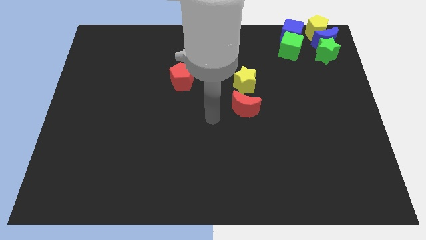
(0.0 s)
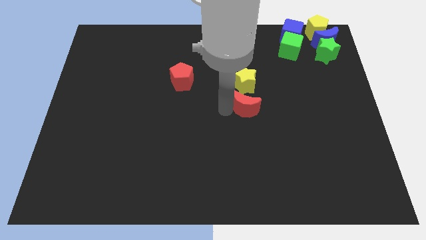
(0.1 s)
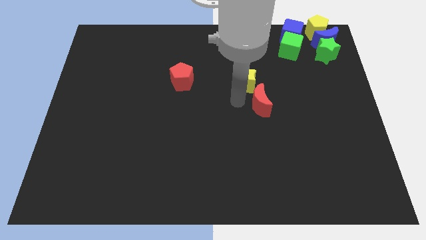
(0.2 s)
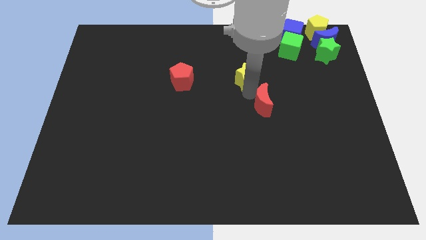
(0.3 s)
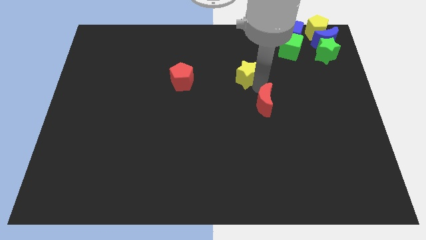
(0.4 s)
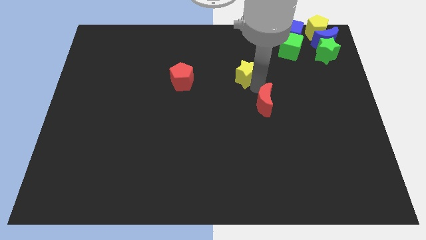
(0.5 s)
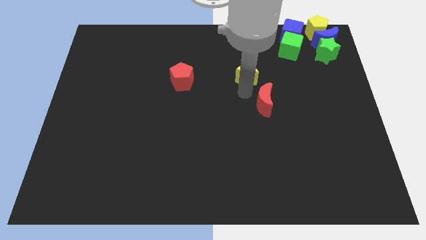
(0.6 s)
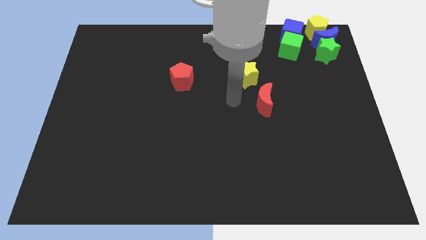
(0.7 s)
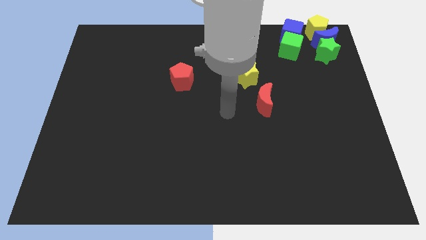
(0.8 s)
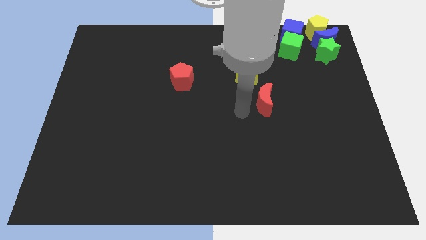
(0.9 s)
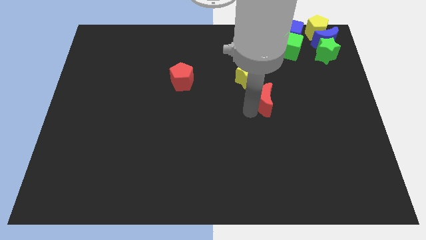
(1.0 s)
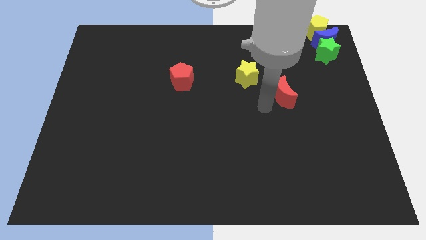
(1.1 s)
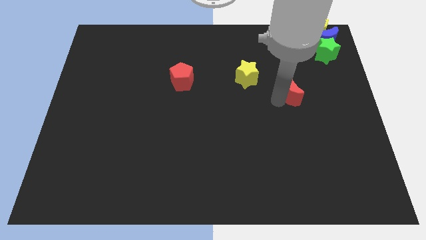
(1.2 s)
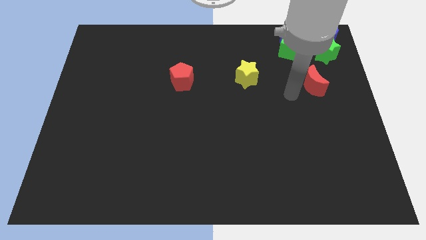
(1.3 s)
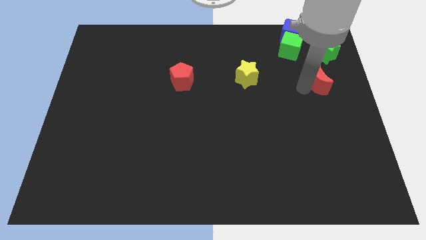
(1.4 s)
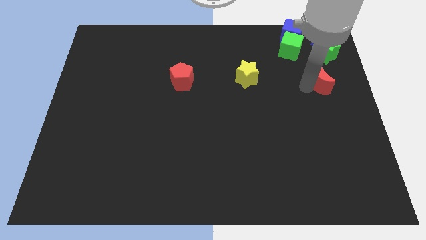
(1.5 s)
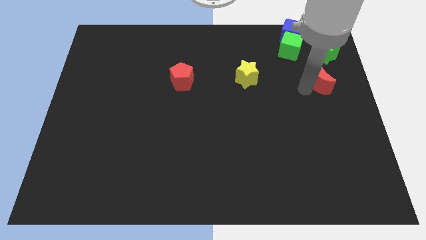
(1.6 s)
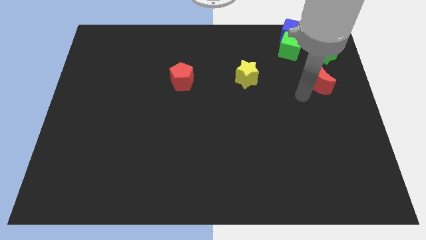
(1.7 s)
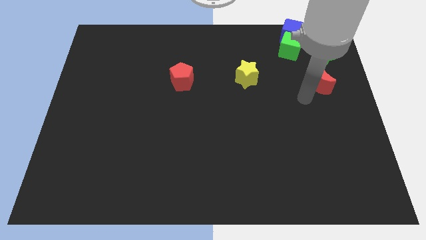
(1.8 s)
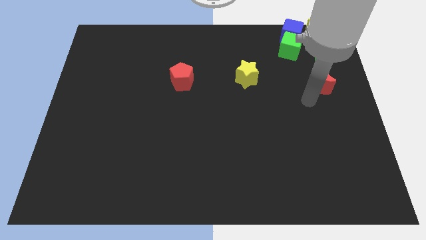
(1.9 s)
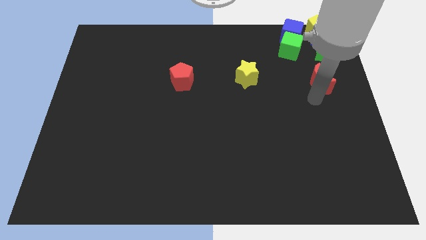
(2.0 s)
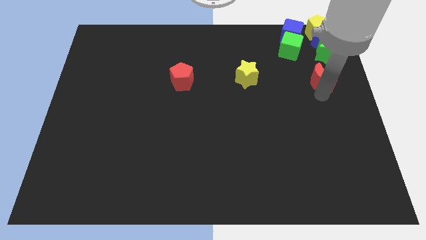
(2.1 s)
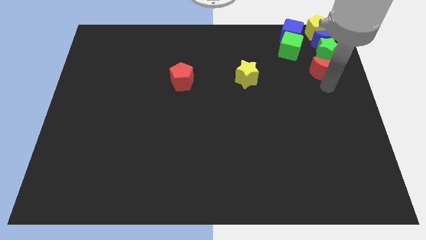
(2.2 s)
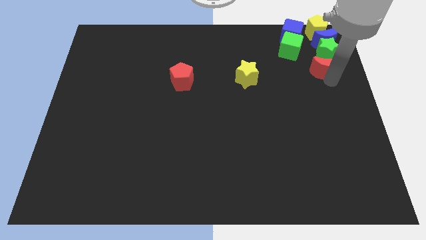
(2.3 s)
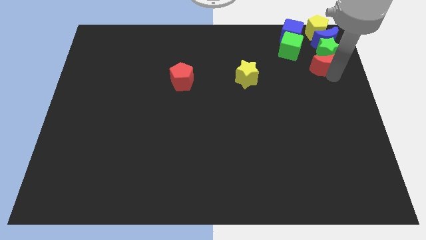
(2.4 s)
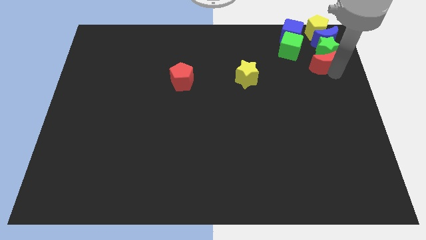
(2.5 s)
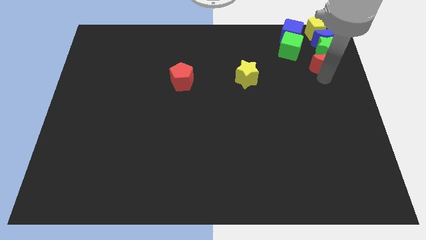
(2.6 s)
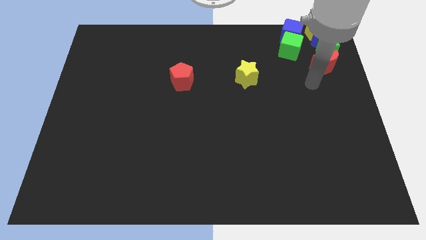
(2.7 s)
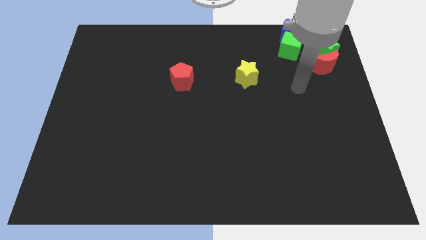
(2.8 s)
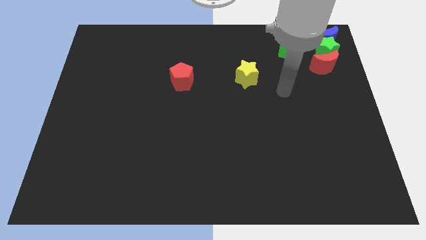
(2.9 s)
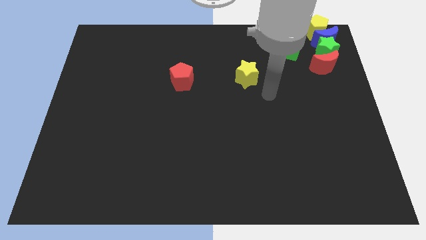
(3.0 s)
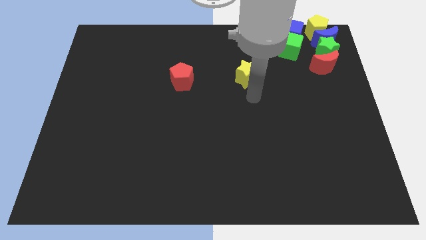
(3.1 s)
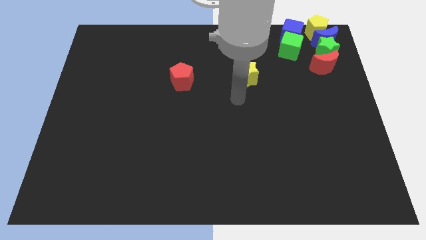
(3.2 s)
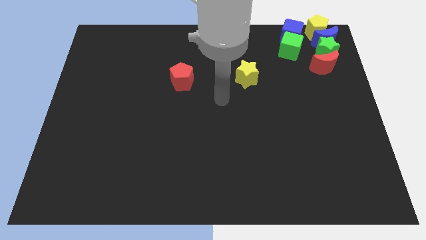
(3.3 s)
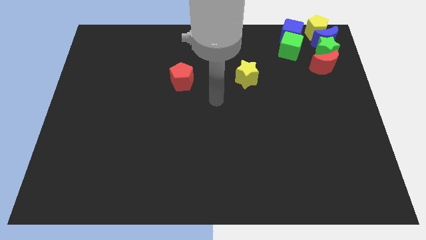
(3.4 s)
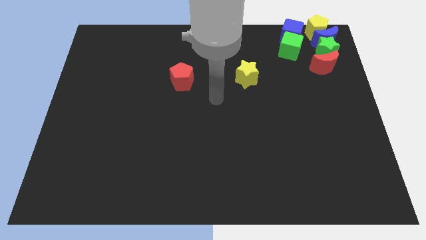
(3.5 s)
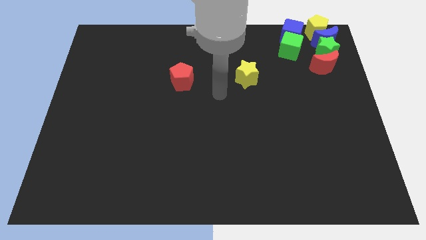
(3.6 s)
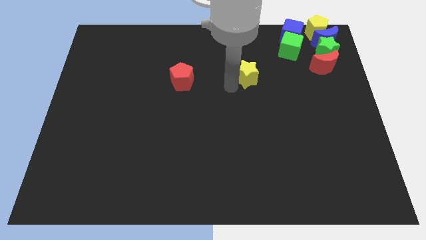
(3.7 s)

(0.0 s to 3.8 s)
move the red crescent to the bottom of the green star

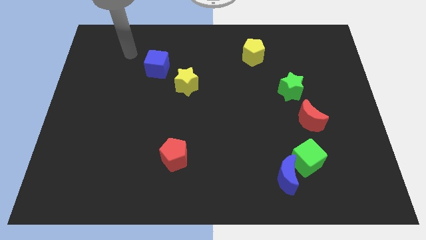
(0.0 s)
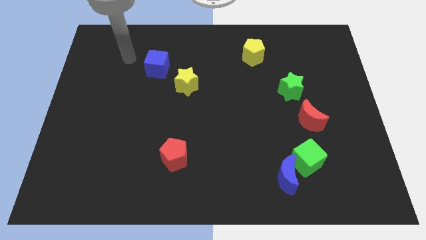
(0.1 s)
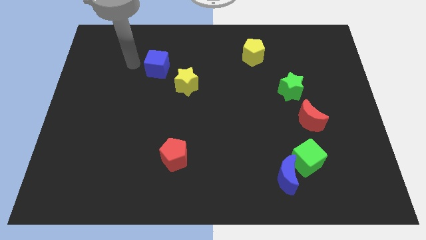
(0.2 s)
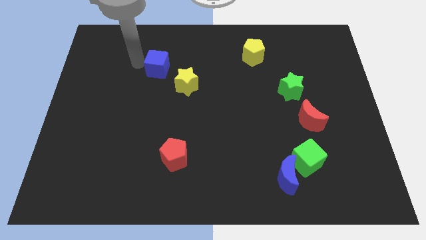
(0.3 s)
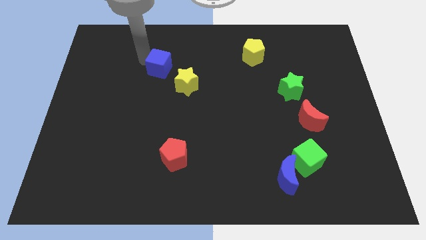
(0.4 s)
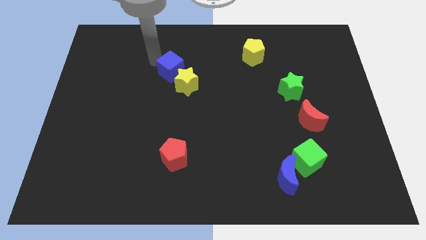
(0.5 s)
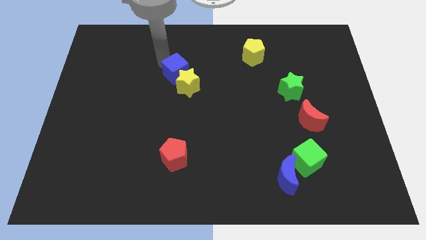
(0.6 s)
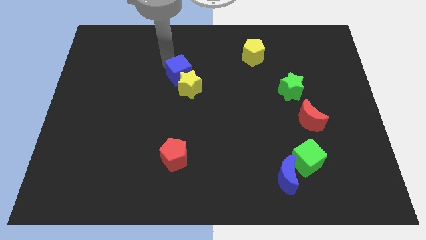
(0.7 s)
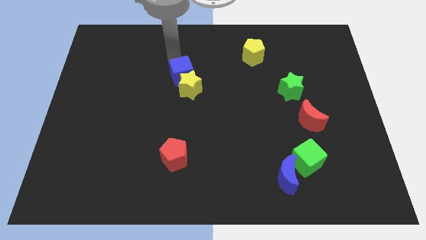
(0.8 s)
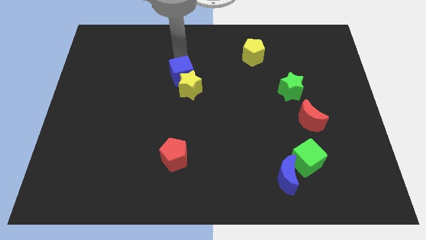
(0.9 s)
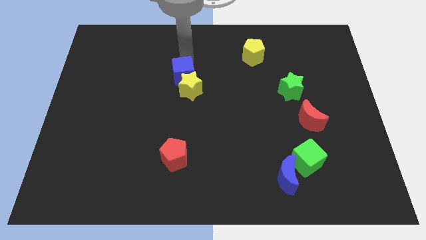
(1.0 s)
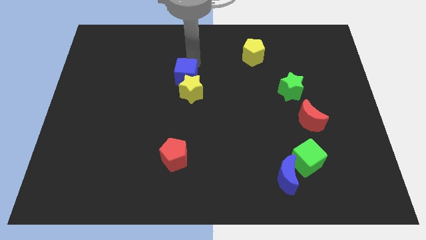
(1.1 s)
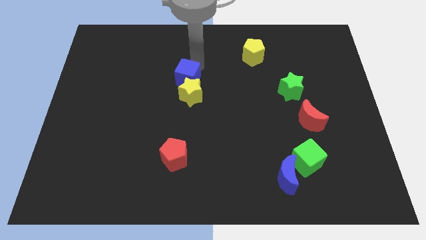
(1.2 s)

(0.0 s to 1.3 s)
push the blue cube above to the yellow star

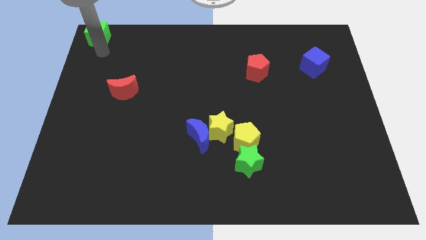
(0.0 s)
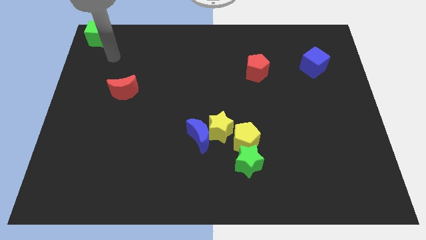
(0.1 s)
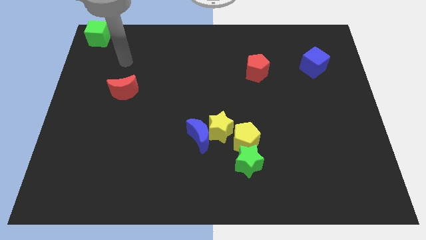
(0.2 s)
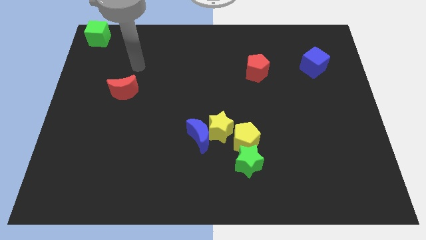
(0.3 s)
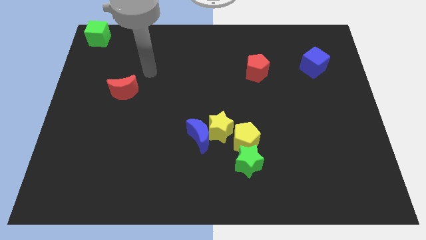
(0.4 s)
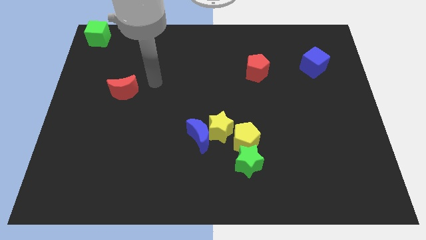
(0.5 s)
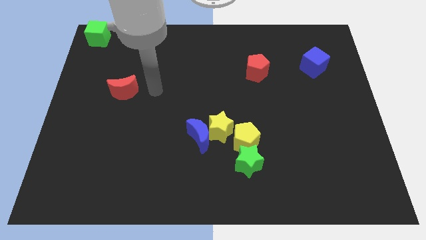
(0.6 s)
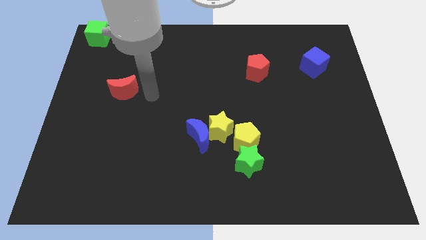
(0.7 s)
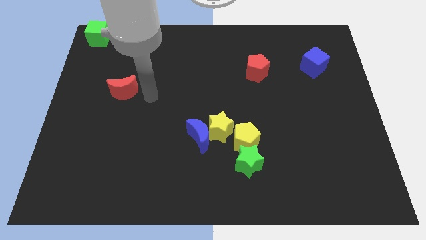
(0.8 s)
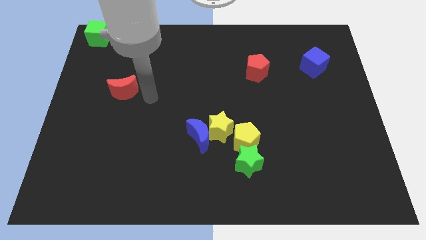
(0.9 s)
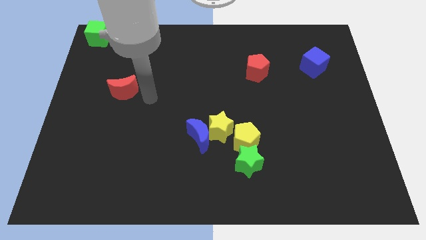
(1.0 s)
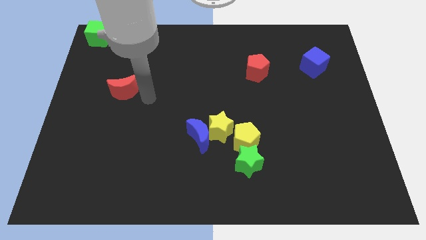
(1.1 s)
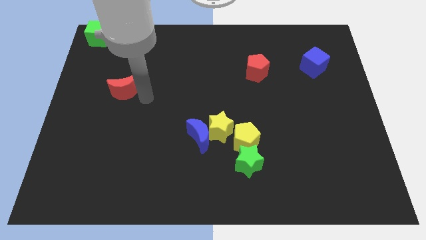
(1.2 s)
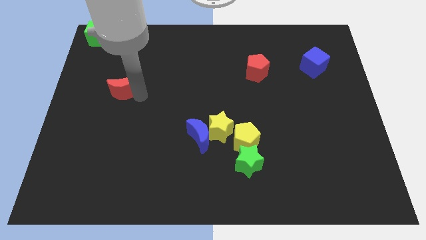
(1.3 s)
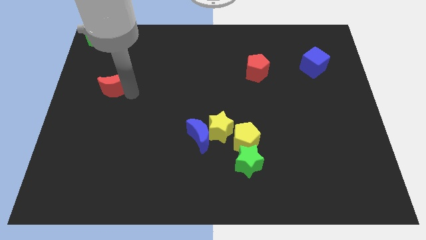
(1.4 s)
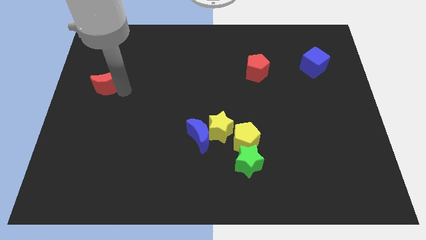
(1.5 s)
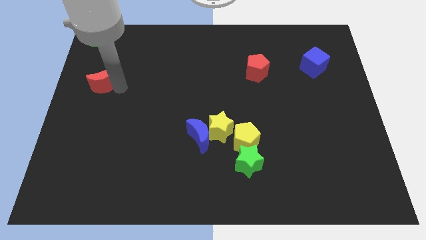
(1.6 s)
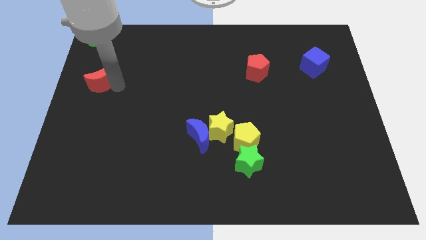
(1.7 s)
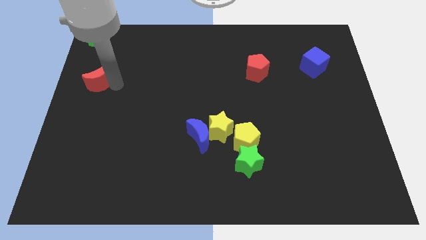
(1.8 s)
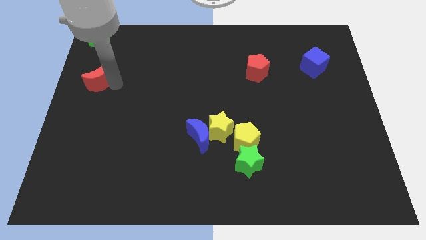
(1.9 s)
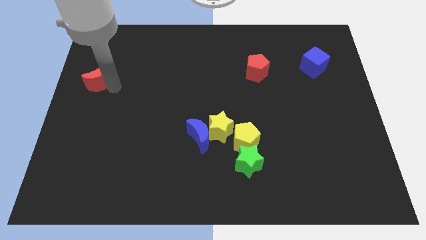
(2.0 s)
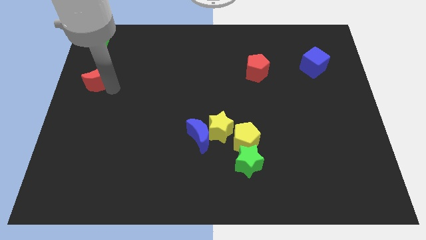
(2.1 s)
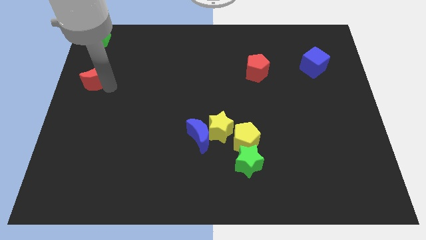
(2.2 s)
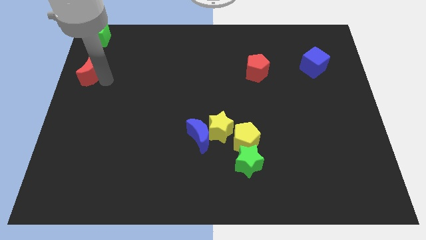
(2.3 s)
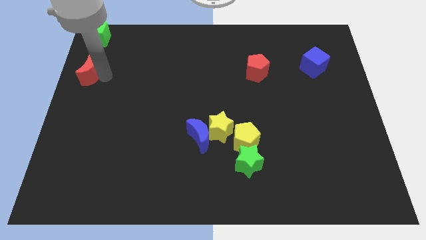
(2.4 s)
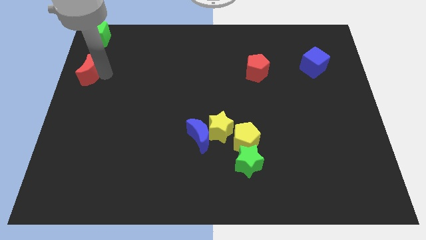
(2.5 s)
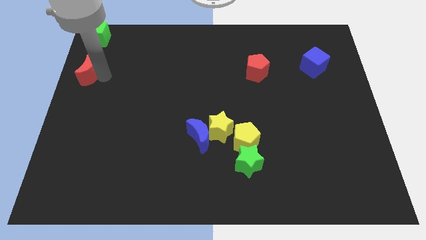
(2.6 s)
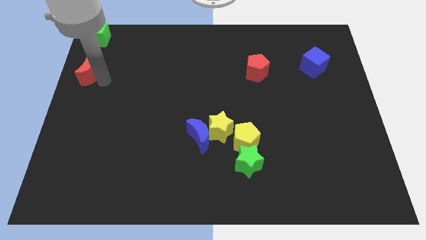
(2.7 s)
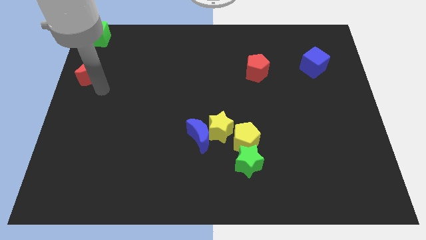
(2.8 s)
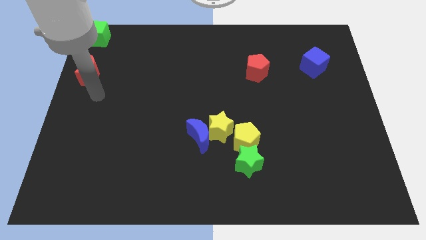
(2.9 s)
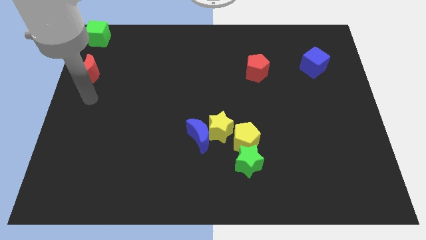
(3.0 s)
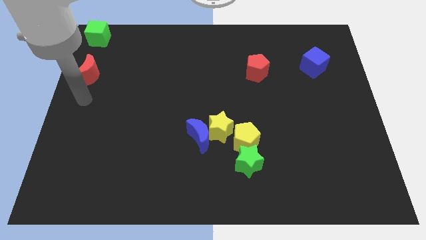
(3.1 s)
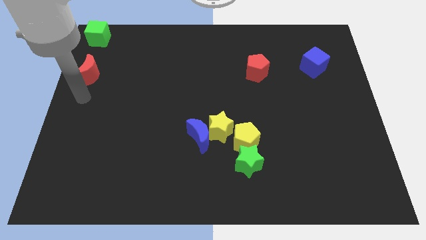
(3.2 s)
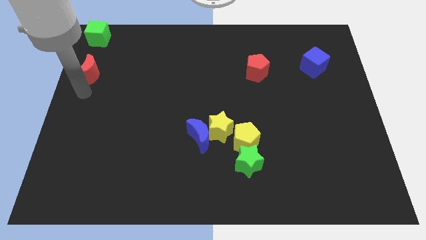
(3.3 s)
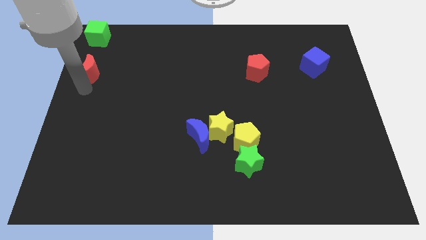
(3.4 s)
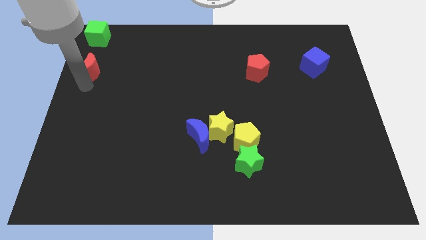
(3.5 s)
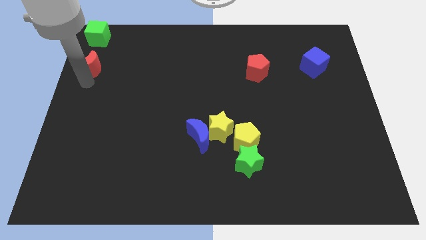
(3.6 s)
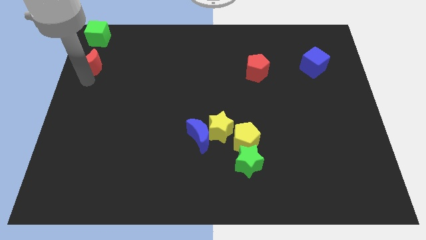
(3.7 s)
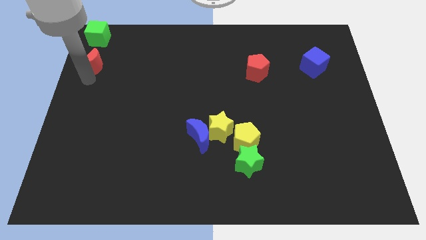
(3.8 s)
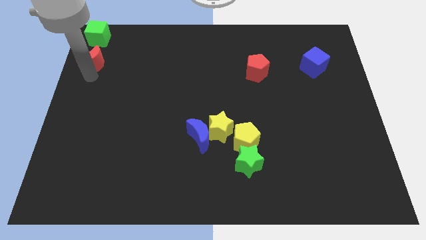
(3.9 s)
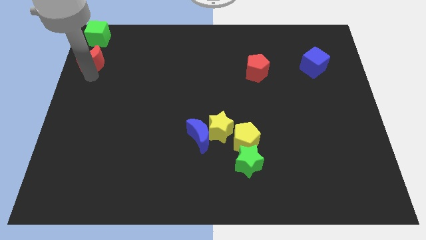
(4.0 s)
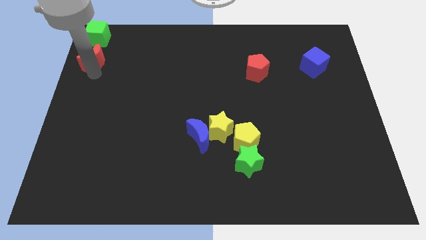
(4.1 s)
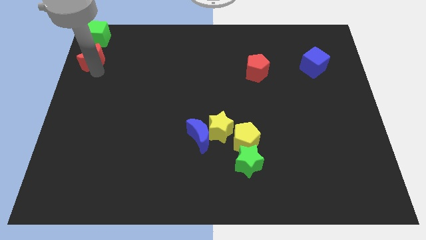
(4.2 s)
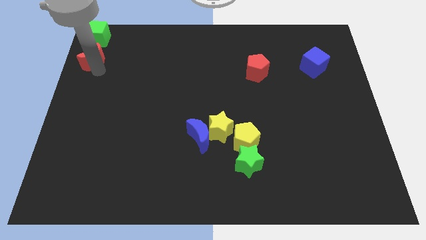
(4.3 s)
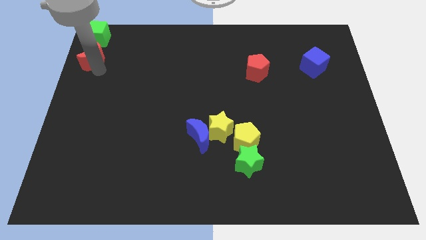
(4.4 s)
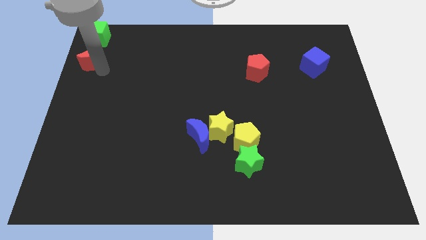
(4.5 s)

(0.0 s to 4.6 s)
move the red crescent to the bottom of the green cube
